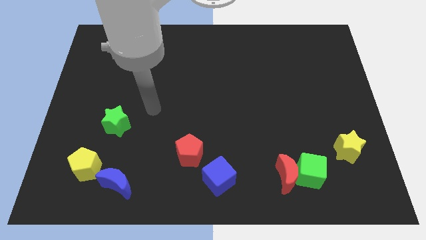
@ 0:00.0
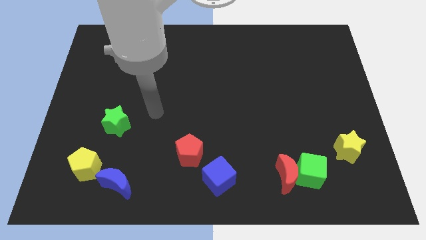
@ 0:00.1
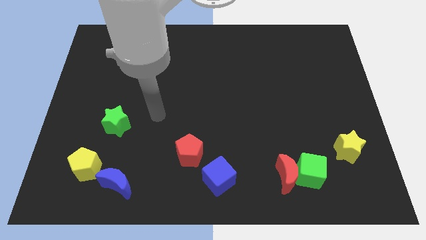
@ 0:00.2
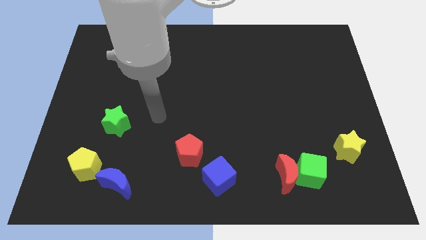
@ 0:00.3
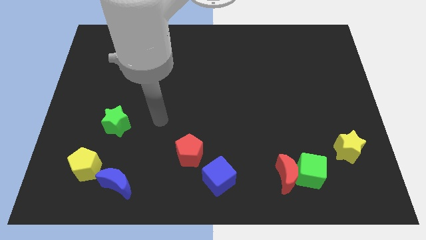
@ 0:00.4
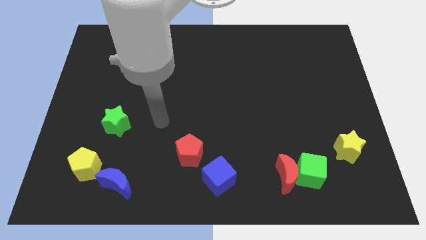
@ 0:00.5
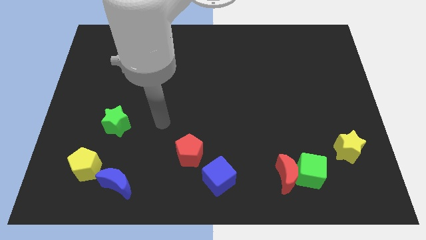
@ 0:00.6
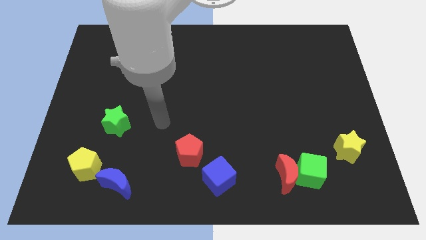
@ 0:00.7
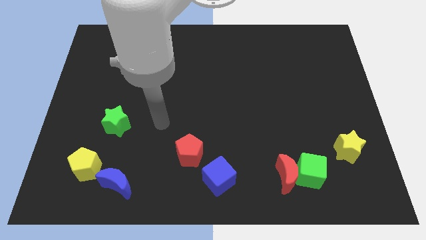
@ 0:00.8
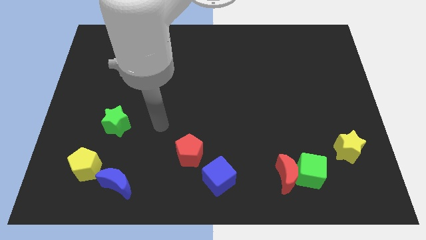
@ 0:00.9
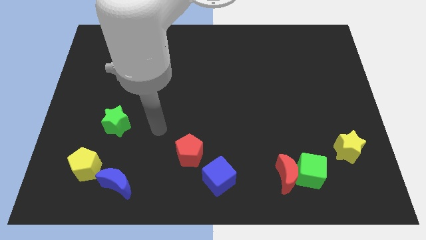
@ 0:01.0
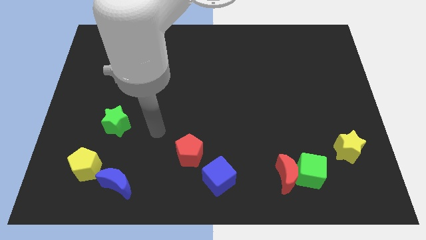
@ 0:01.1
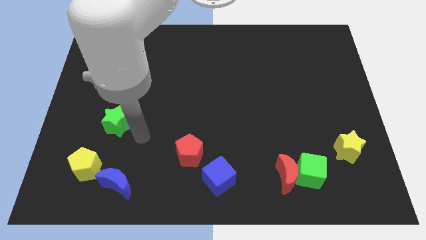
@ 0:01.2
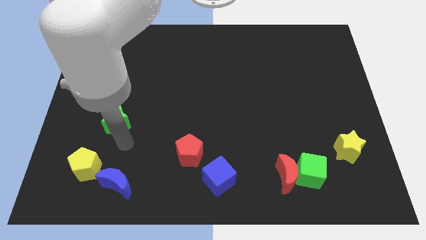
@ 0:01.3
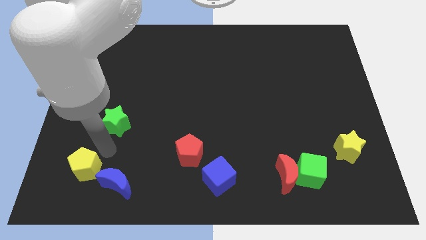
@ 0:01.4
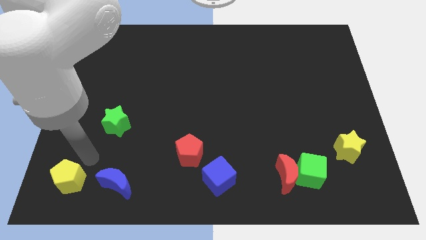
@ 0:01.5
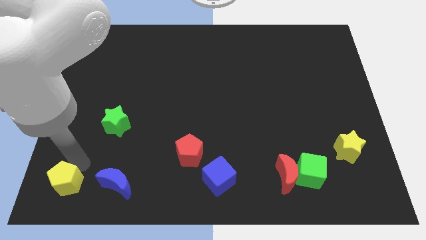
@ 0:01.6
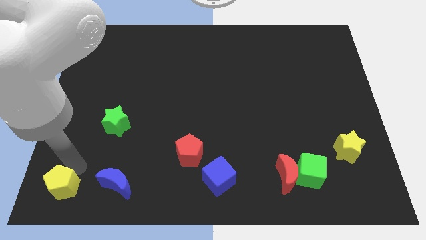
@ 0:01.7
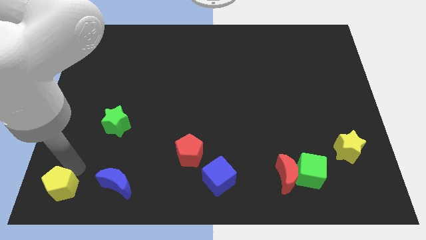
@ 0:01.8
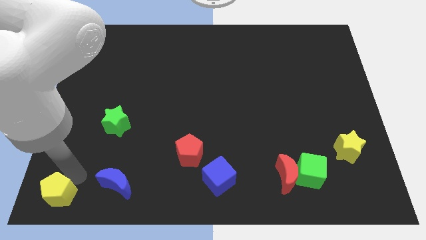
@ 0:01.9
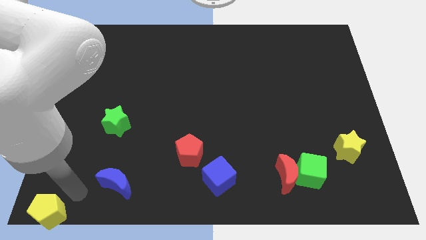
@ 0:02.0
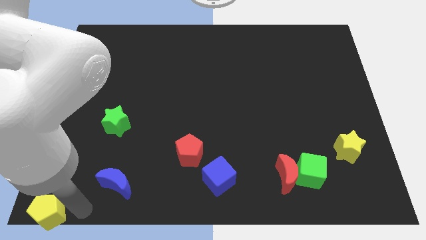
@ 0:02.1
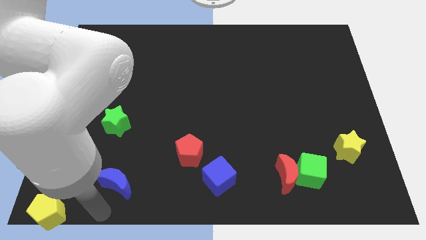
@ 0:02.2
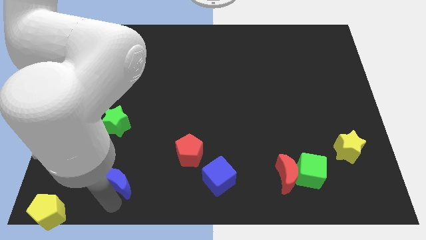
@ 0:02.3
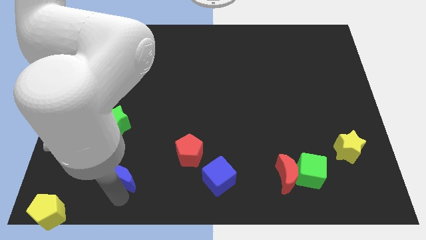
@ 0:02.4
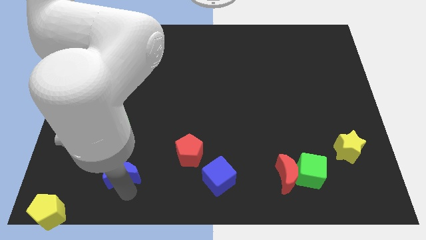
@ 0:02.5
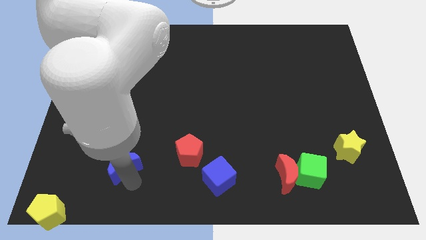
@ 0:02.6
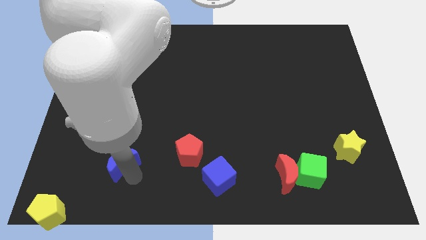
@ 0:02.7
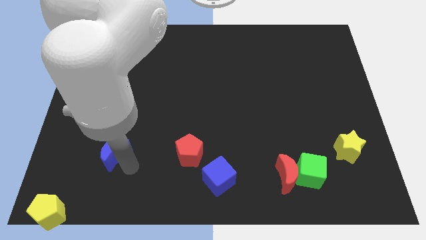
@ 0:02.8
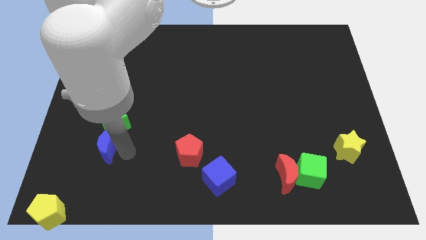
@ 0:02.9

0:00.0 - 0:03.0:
put yellow pentagon and blue crescent in a diagonal line

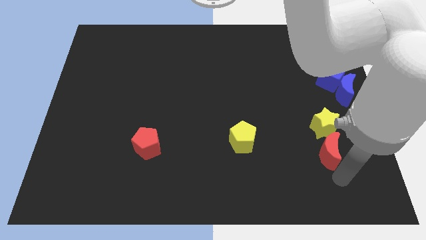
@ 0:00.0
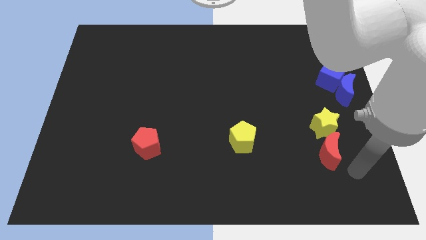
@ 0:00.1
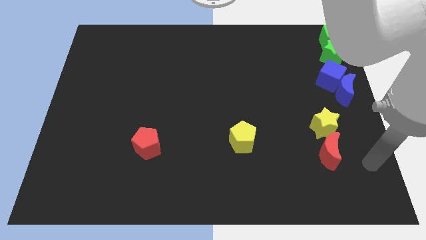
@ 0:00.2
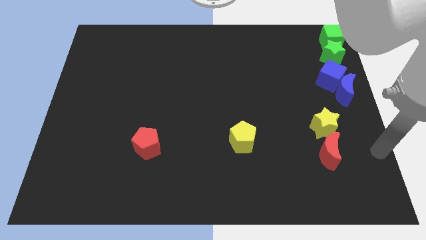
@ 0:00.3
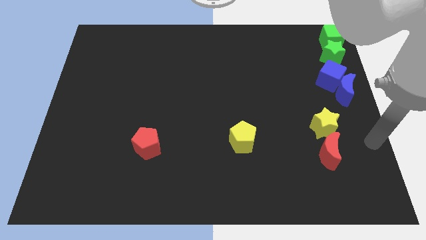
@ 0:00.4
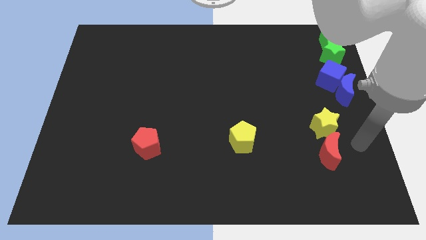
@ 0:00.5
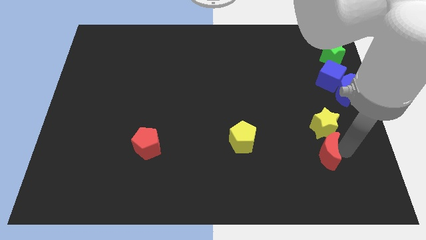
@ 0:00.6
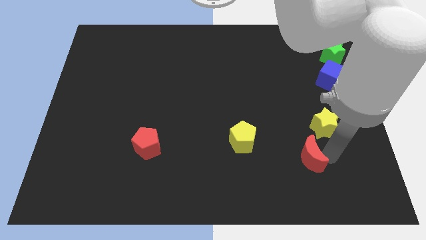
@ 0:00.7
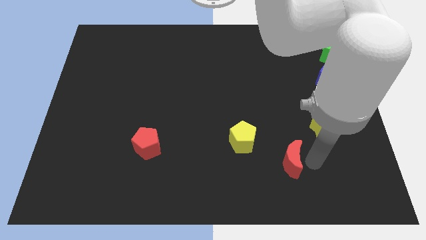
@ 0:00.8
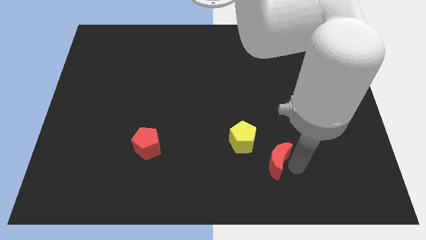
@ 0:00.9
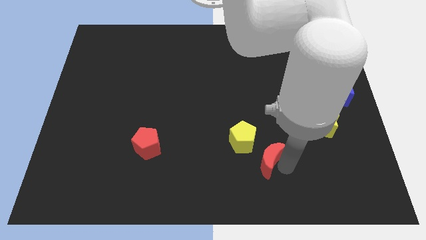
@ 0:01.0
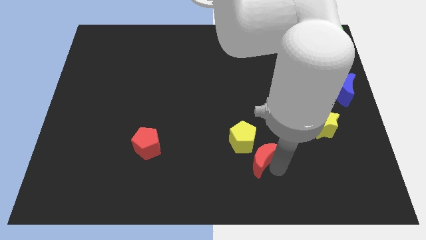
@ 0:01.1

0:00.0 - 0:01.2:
place the red moon at the bottom right side of yellow pentagon

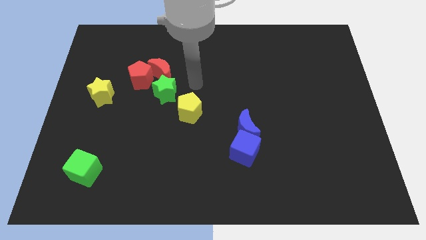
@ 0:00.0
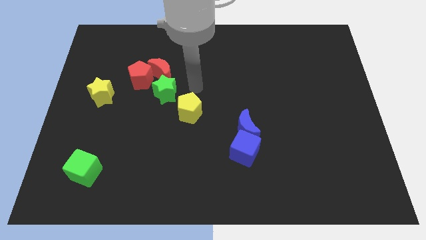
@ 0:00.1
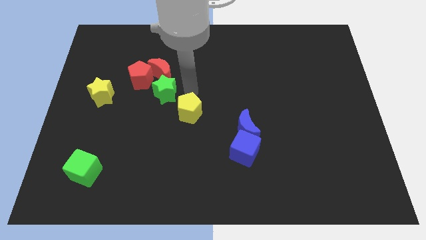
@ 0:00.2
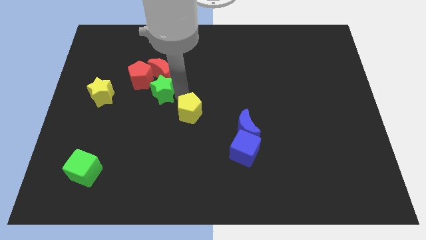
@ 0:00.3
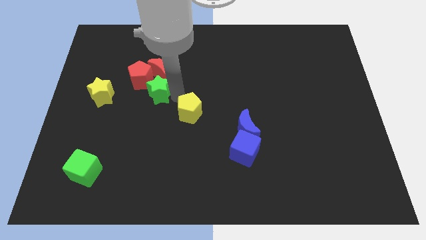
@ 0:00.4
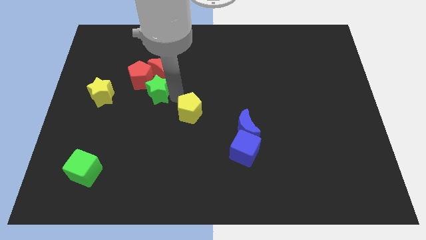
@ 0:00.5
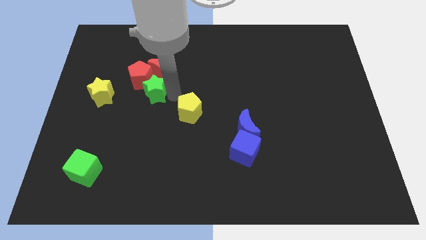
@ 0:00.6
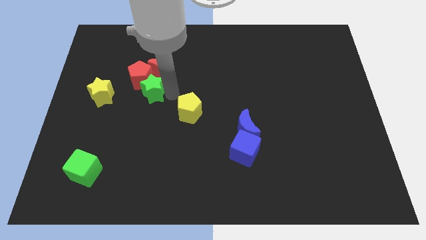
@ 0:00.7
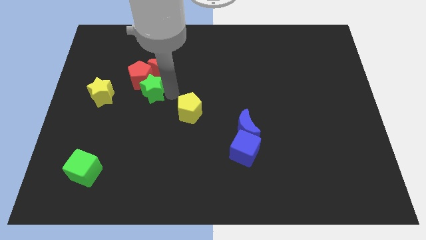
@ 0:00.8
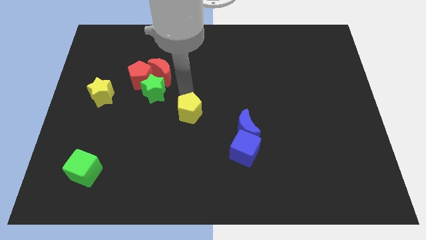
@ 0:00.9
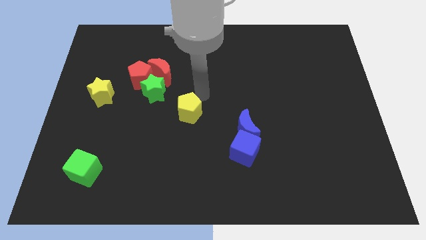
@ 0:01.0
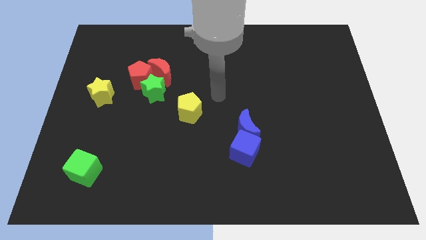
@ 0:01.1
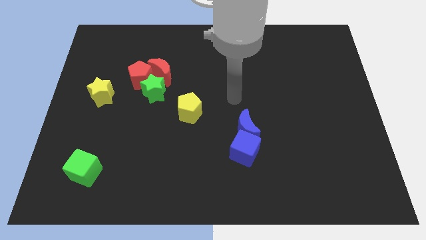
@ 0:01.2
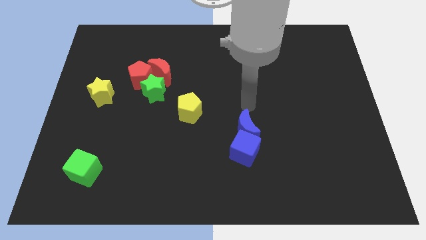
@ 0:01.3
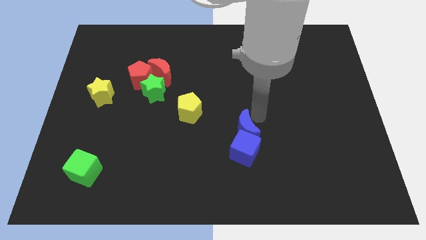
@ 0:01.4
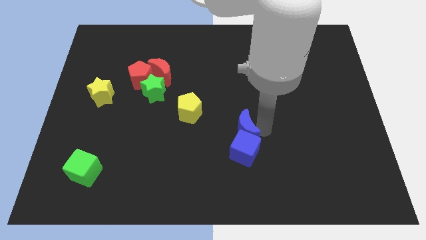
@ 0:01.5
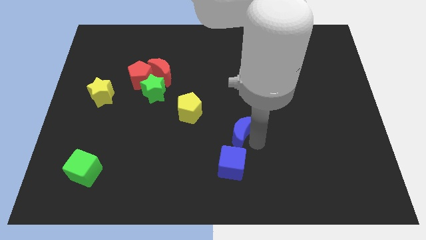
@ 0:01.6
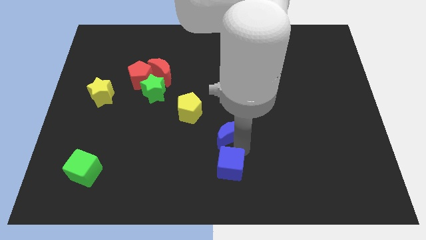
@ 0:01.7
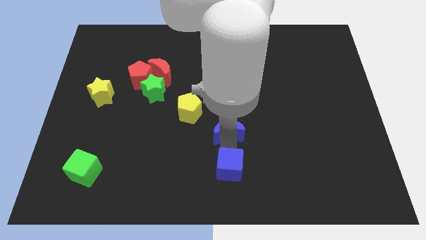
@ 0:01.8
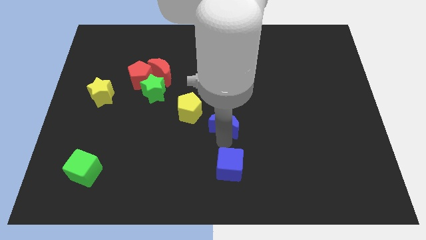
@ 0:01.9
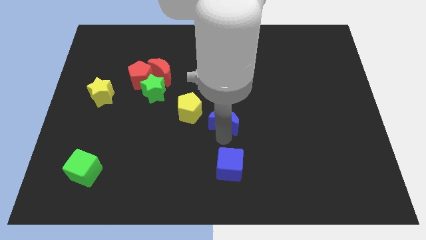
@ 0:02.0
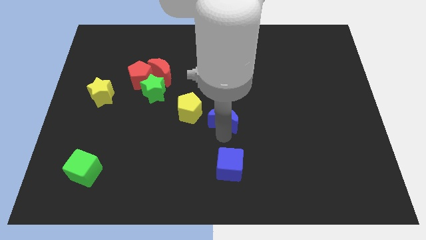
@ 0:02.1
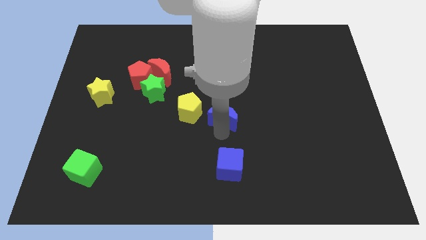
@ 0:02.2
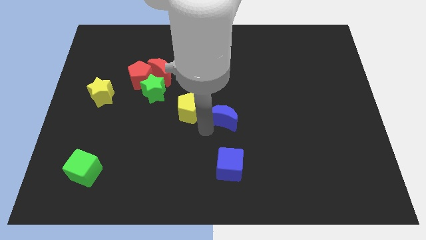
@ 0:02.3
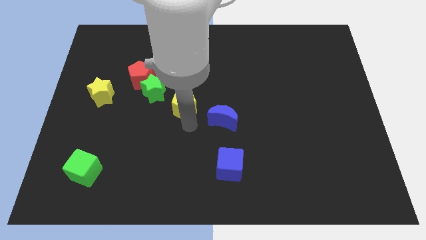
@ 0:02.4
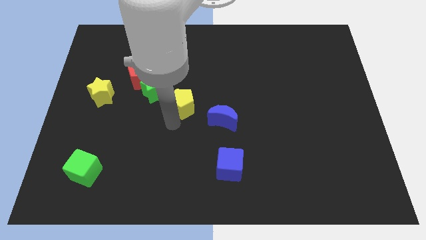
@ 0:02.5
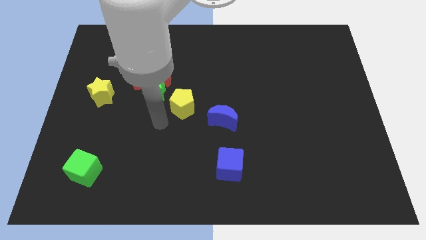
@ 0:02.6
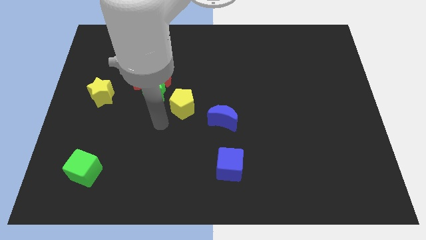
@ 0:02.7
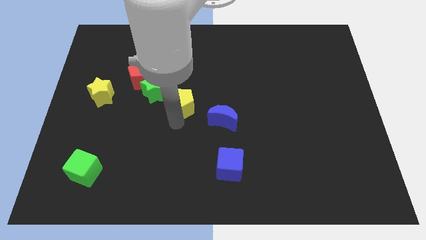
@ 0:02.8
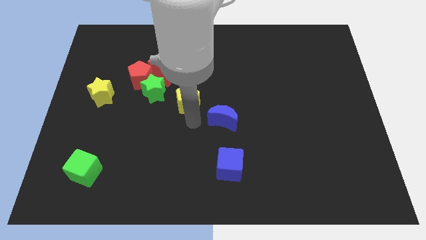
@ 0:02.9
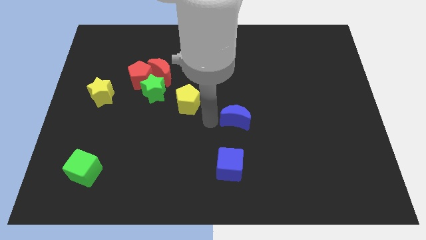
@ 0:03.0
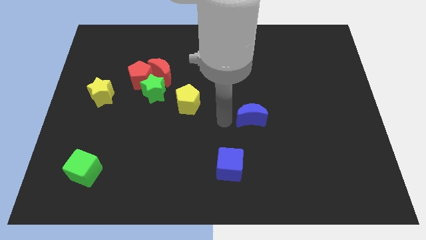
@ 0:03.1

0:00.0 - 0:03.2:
push the green star towards the red pentagon

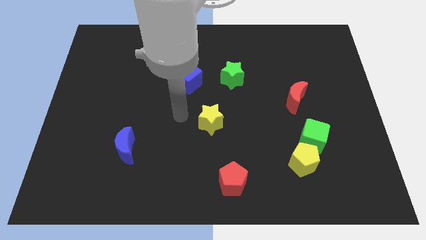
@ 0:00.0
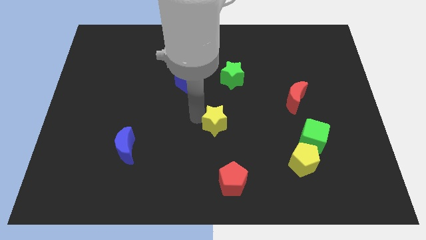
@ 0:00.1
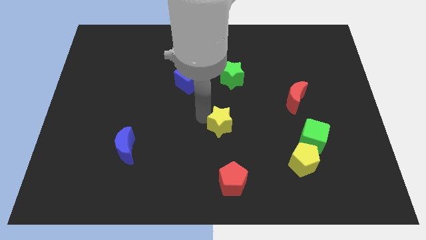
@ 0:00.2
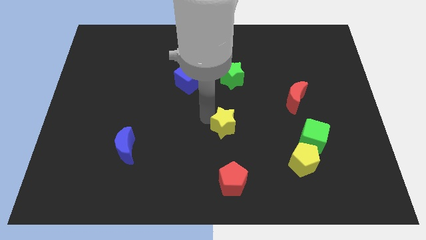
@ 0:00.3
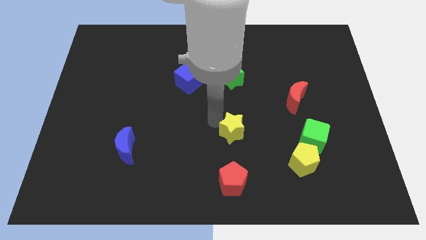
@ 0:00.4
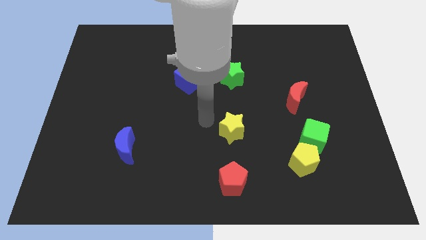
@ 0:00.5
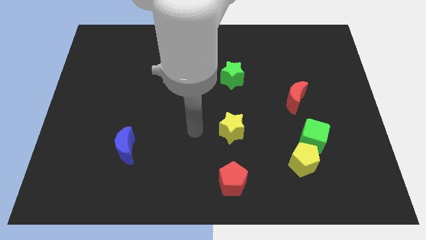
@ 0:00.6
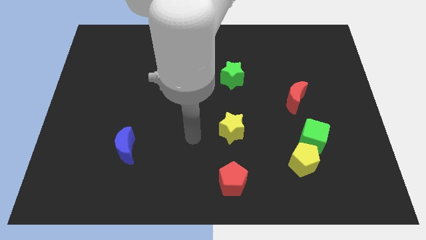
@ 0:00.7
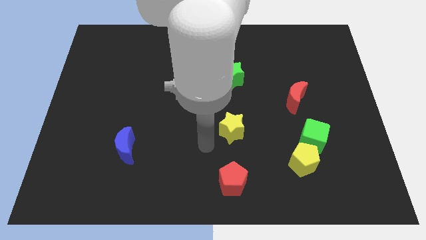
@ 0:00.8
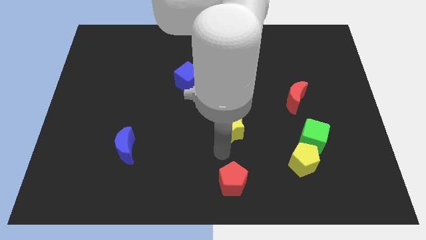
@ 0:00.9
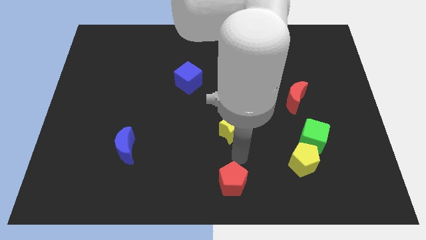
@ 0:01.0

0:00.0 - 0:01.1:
place the arm down to the yellow star

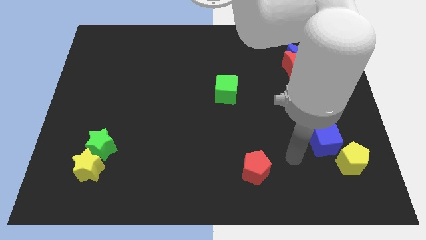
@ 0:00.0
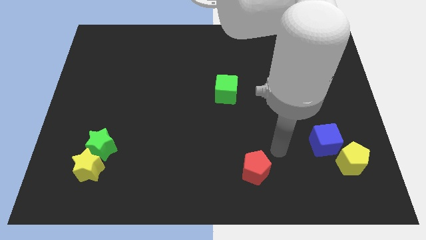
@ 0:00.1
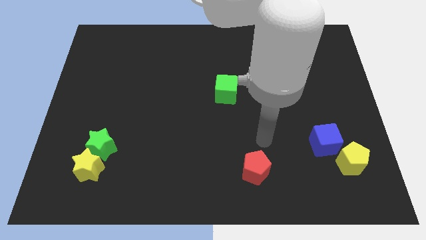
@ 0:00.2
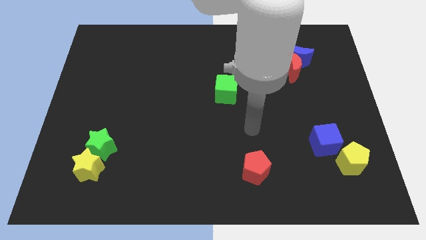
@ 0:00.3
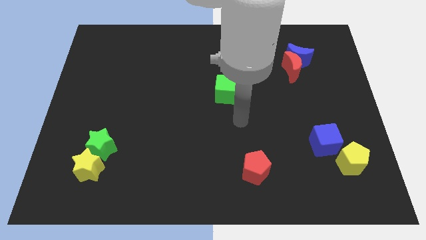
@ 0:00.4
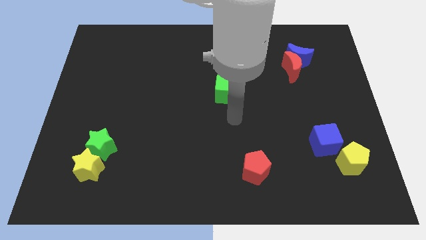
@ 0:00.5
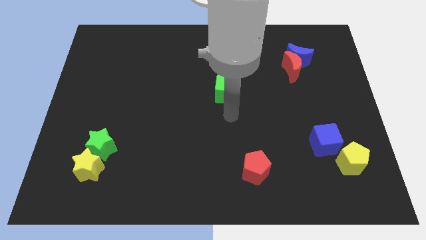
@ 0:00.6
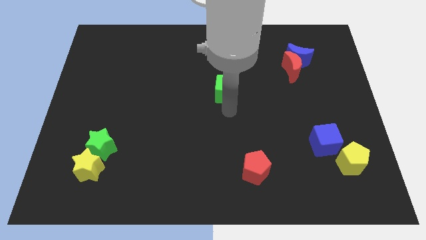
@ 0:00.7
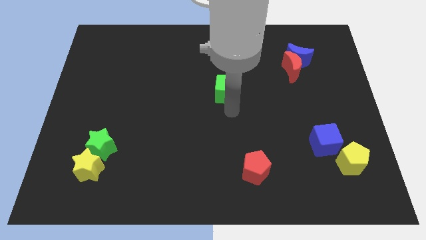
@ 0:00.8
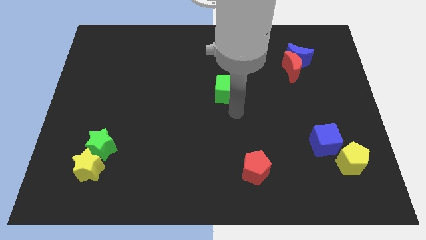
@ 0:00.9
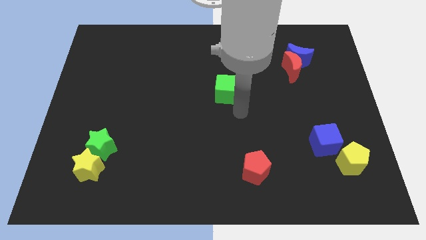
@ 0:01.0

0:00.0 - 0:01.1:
move your arm to the bottom of green cube
